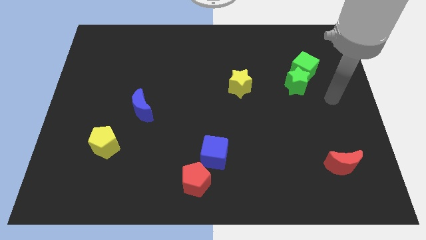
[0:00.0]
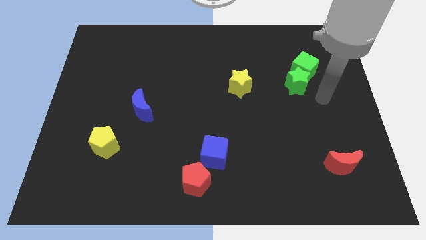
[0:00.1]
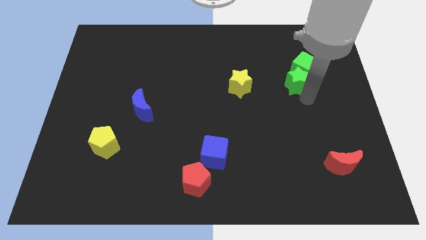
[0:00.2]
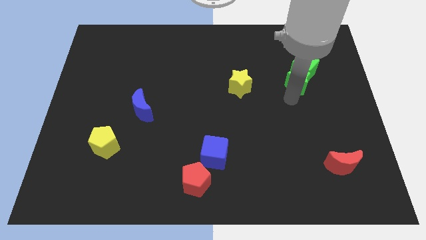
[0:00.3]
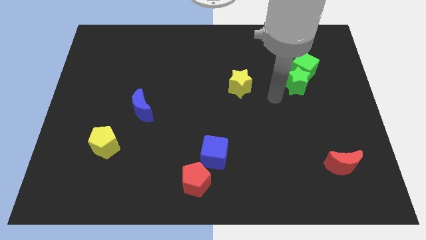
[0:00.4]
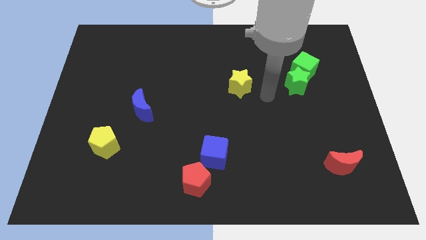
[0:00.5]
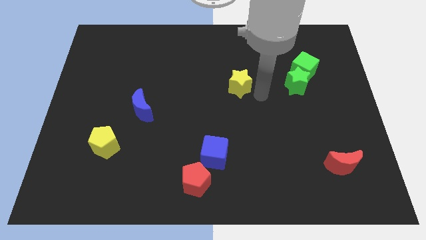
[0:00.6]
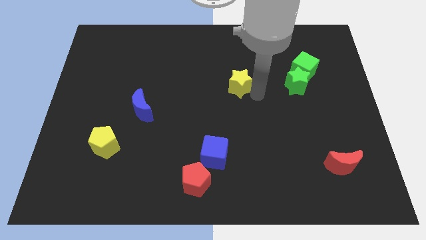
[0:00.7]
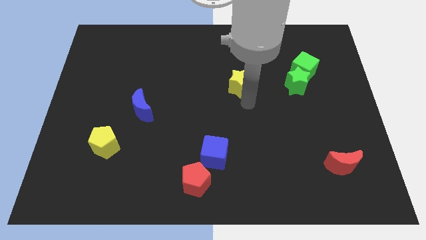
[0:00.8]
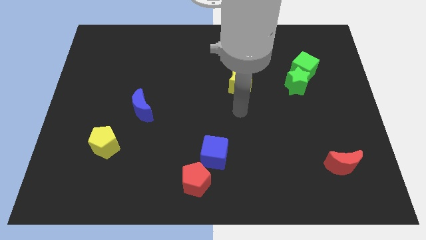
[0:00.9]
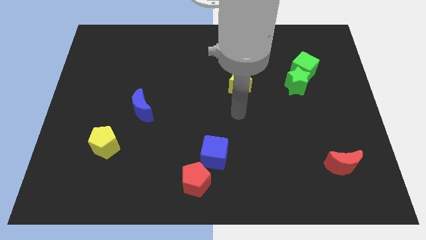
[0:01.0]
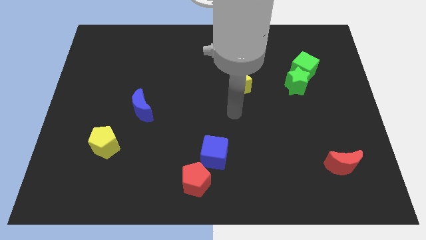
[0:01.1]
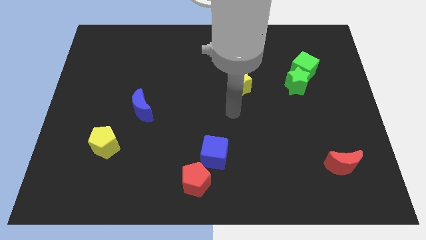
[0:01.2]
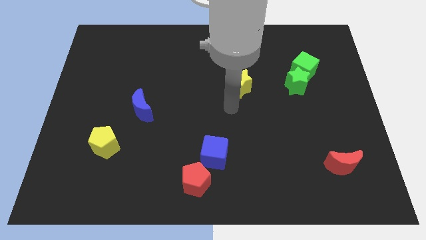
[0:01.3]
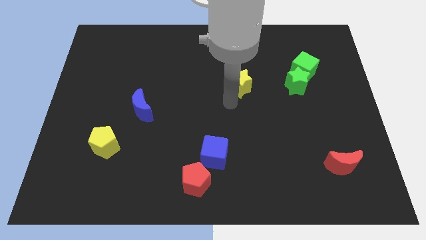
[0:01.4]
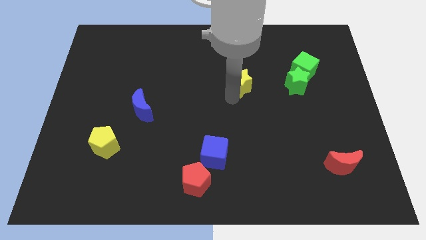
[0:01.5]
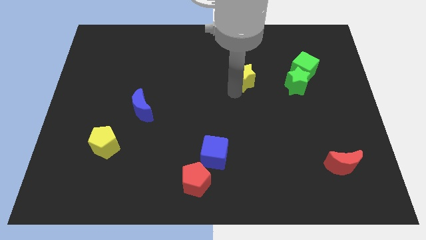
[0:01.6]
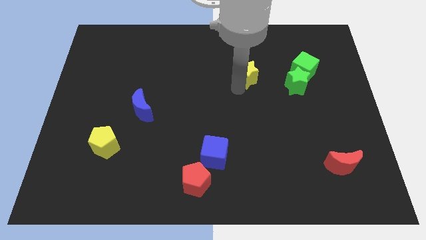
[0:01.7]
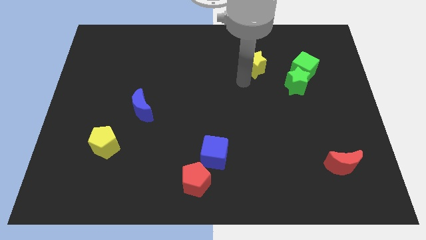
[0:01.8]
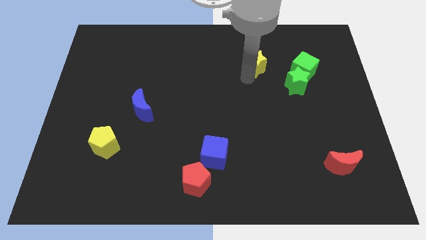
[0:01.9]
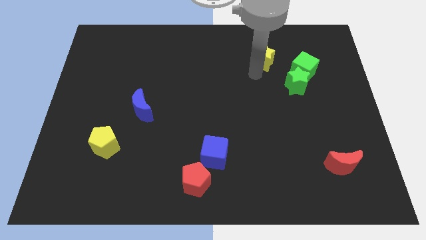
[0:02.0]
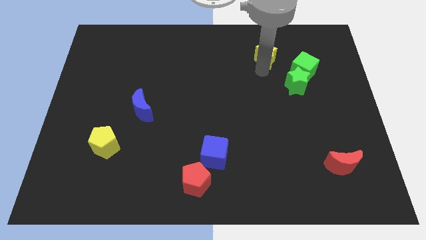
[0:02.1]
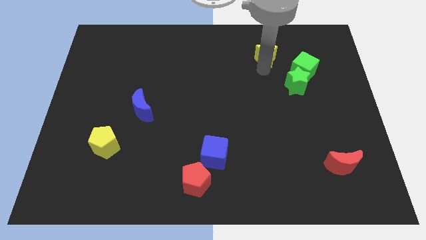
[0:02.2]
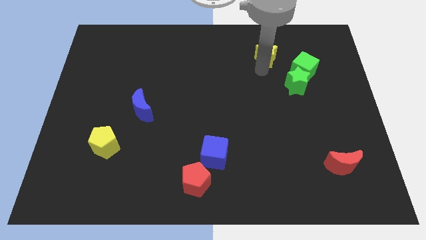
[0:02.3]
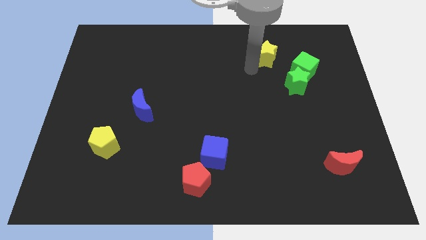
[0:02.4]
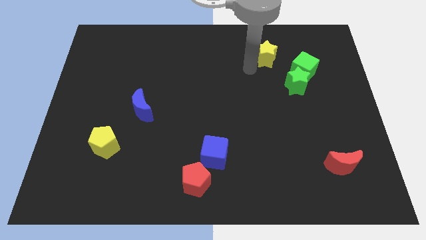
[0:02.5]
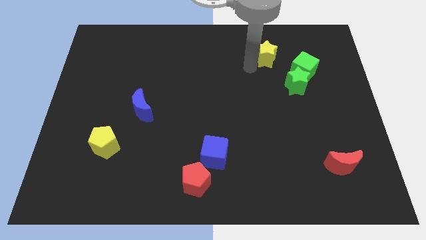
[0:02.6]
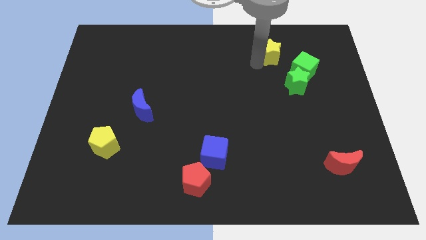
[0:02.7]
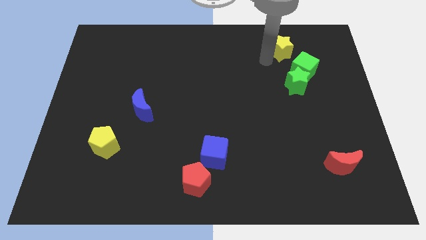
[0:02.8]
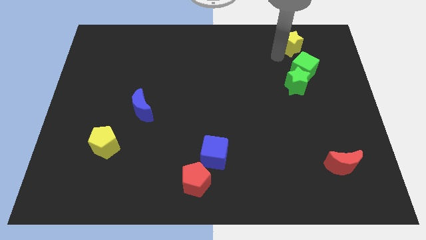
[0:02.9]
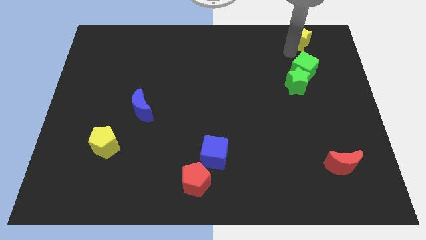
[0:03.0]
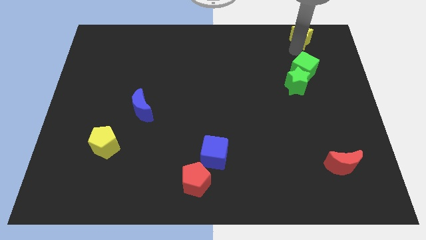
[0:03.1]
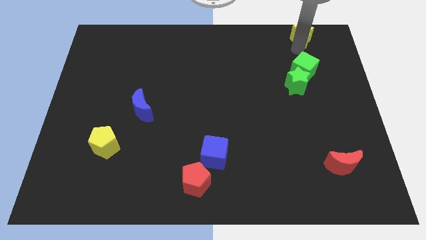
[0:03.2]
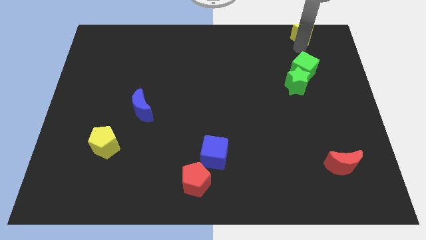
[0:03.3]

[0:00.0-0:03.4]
move the yelow star towards the top right side of the table

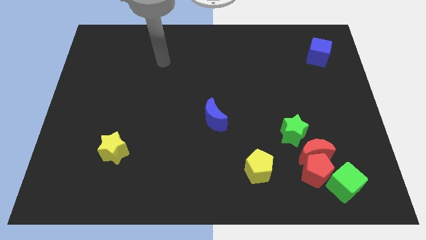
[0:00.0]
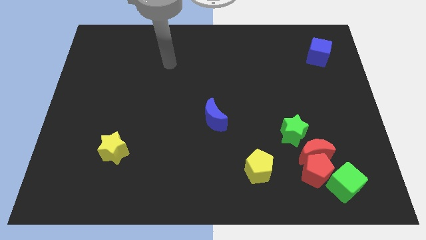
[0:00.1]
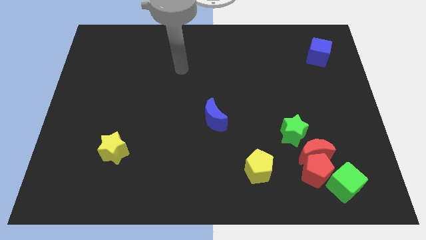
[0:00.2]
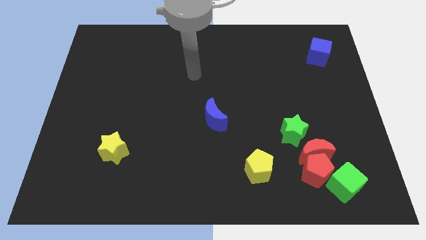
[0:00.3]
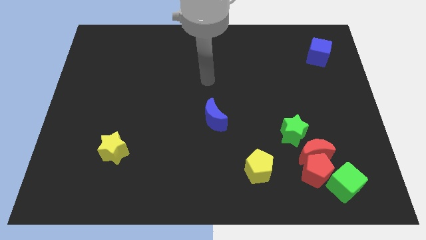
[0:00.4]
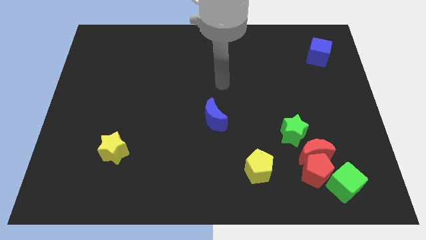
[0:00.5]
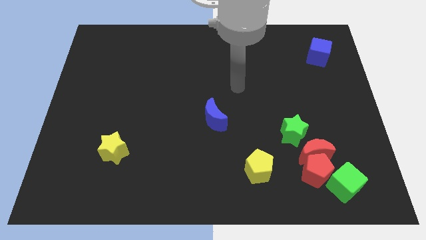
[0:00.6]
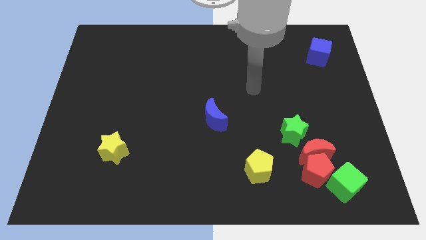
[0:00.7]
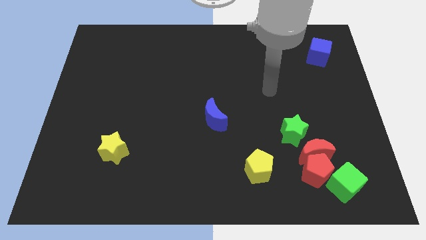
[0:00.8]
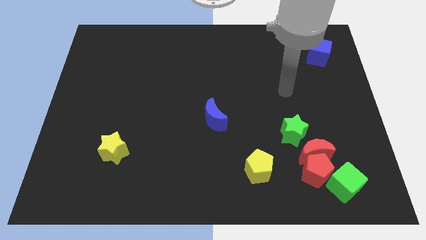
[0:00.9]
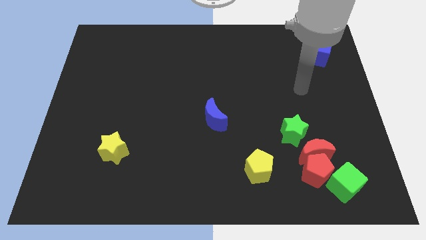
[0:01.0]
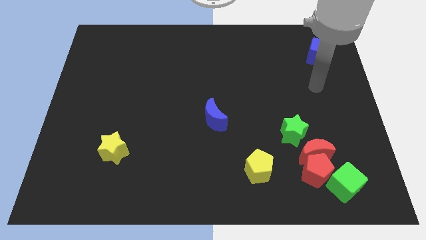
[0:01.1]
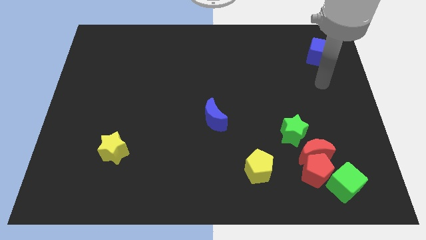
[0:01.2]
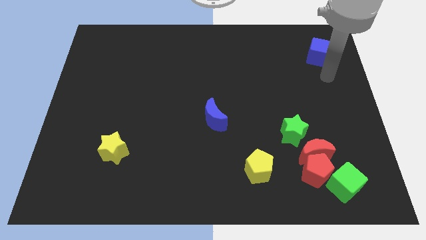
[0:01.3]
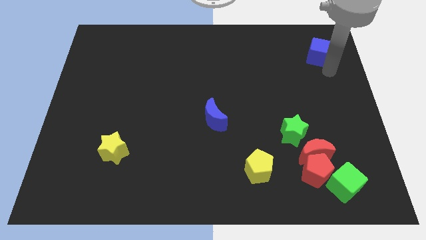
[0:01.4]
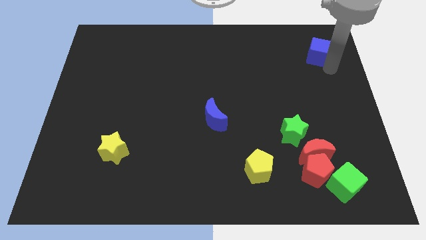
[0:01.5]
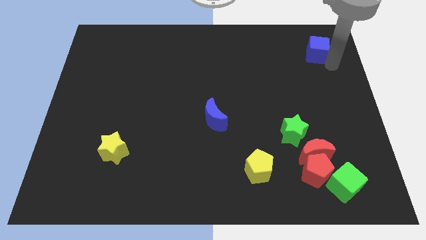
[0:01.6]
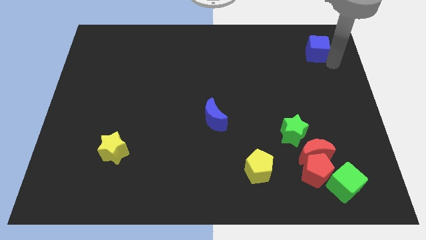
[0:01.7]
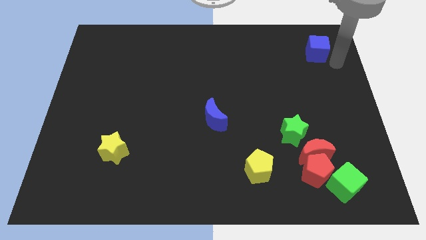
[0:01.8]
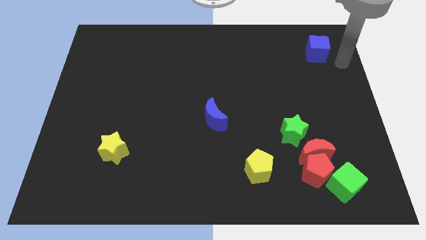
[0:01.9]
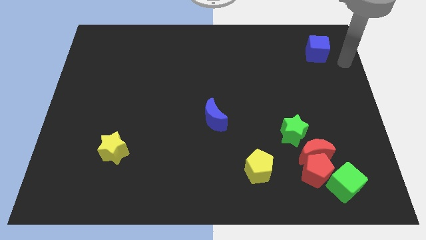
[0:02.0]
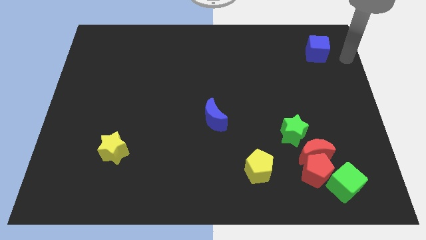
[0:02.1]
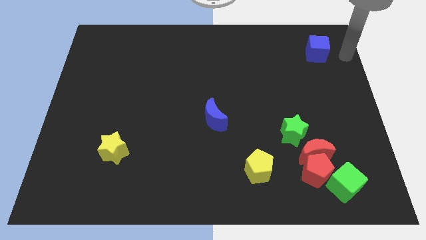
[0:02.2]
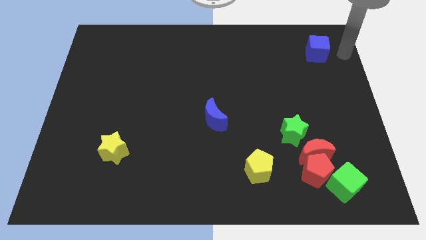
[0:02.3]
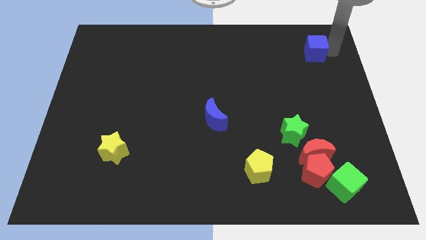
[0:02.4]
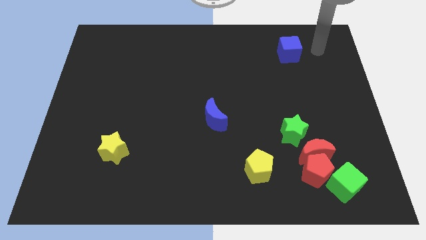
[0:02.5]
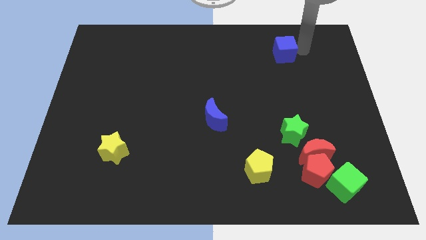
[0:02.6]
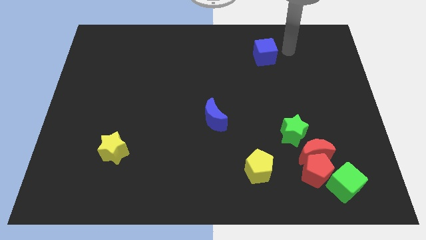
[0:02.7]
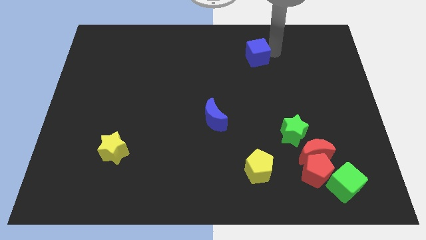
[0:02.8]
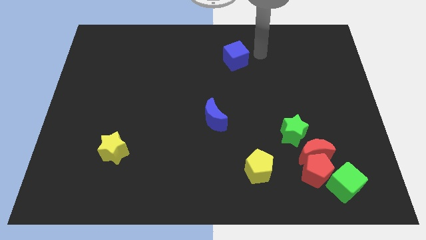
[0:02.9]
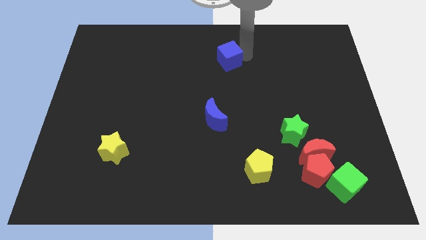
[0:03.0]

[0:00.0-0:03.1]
push the blue cube towards the top center of the board

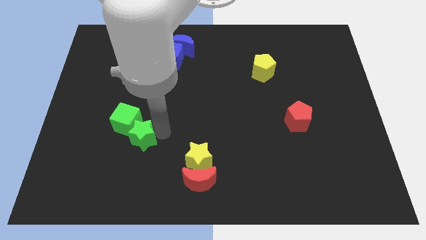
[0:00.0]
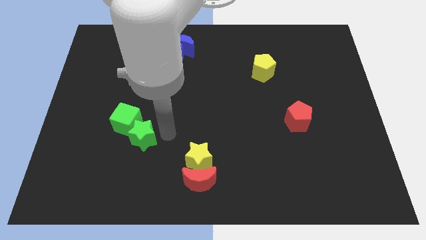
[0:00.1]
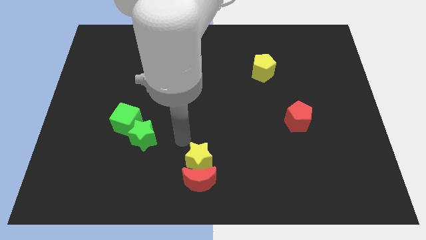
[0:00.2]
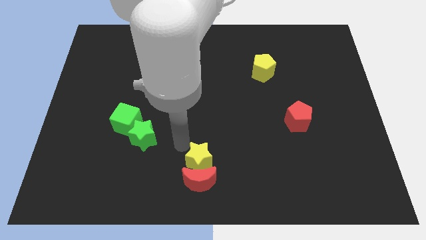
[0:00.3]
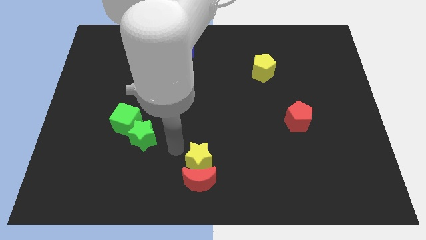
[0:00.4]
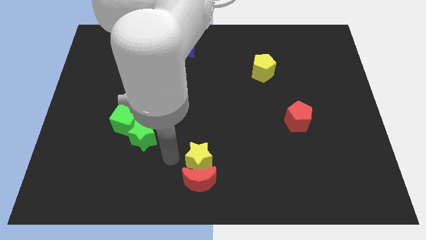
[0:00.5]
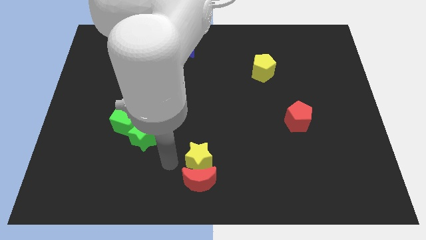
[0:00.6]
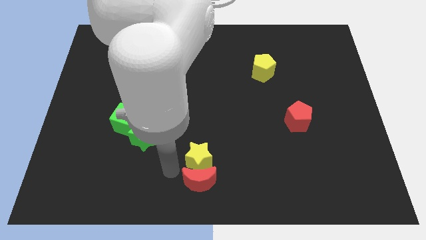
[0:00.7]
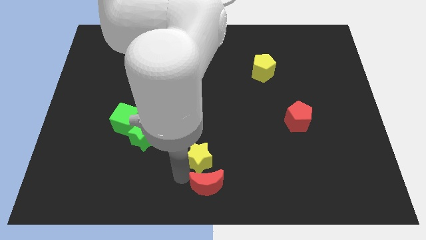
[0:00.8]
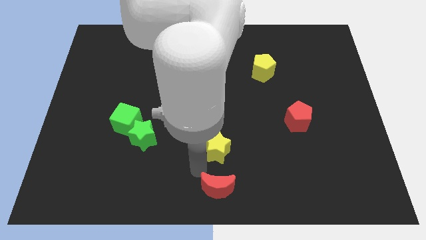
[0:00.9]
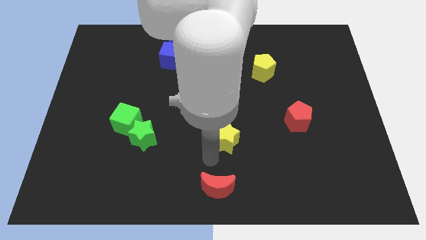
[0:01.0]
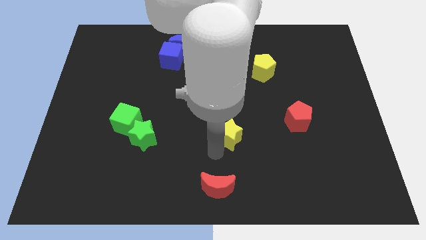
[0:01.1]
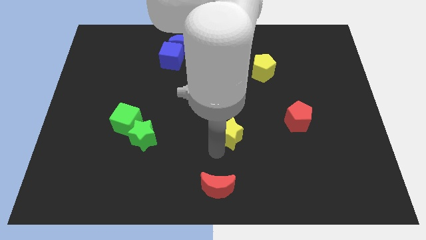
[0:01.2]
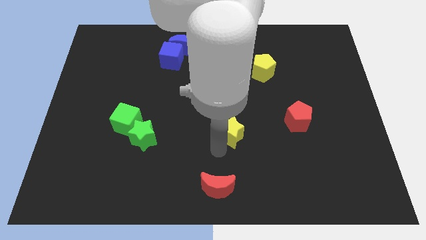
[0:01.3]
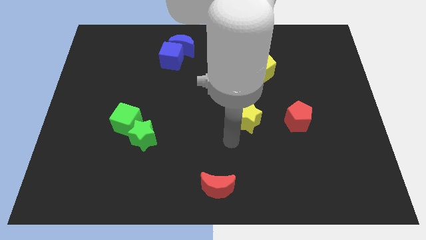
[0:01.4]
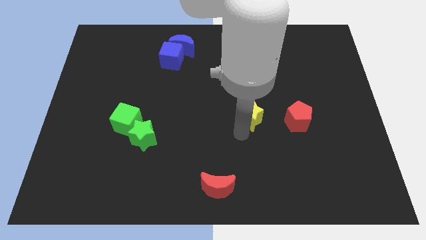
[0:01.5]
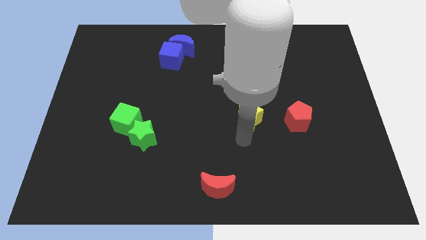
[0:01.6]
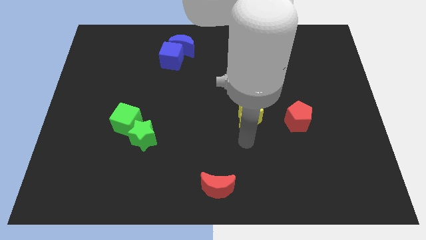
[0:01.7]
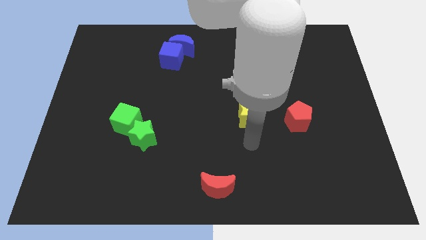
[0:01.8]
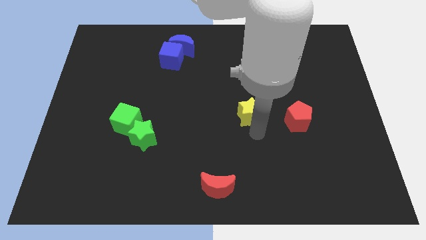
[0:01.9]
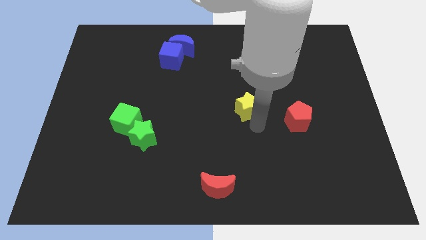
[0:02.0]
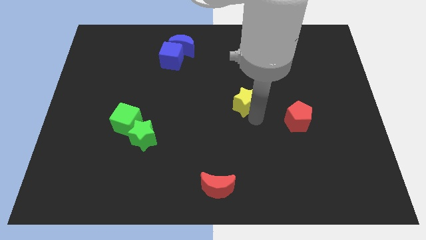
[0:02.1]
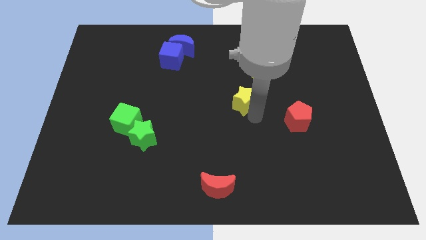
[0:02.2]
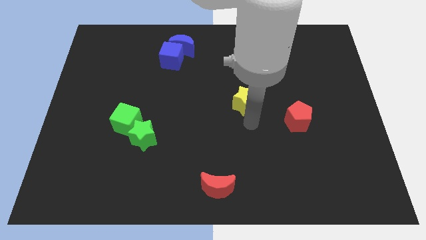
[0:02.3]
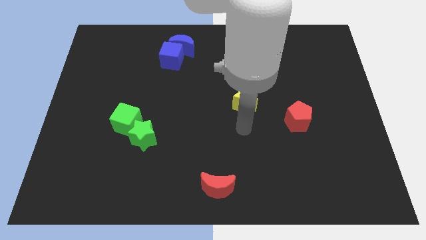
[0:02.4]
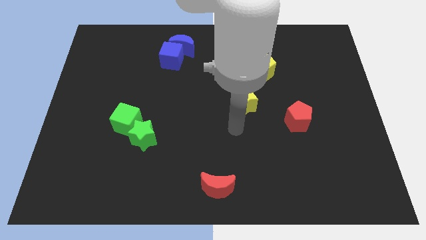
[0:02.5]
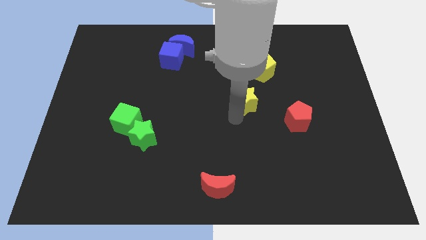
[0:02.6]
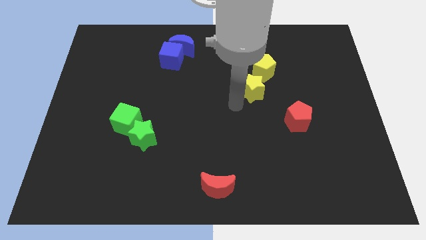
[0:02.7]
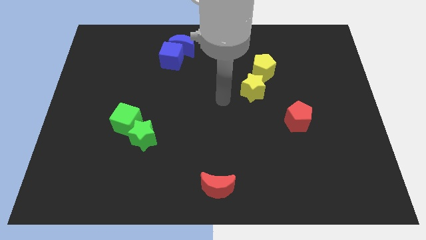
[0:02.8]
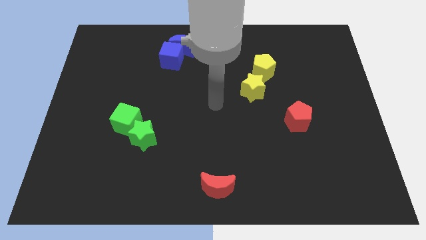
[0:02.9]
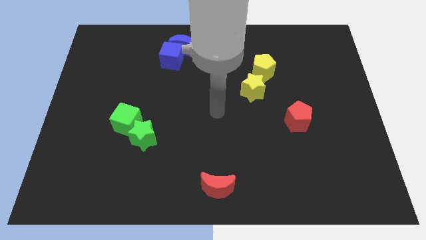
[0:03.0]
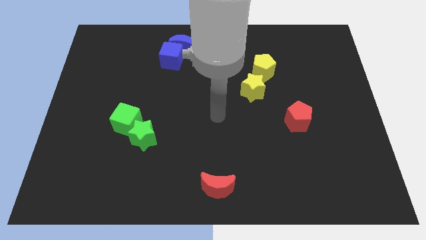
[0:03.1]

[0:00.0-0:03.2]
push the yellow star towards yellow pentagon
